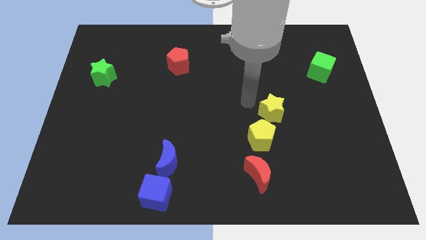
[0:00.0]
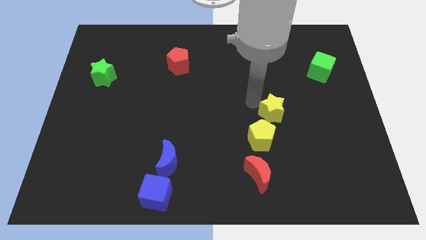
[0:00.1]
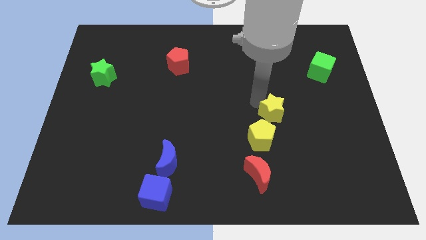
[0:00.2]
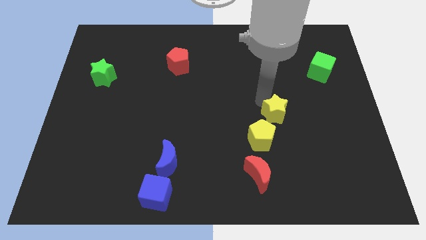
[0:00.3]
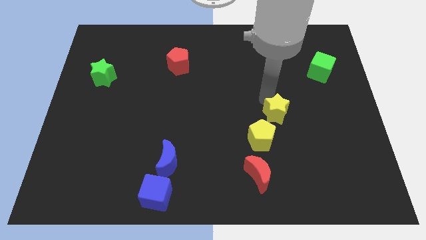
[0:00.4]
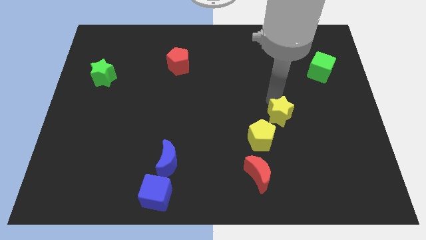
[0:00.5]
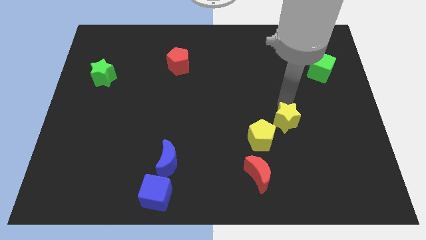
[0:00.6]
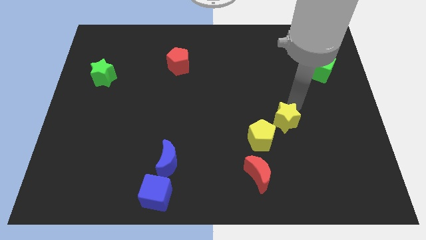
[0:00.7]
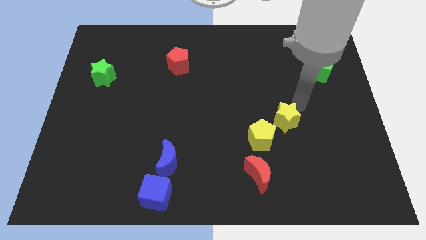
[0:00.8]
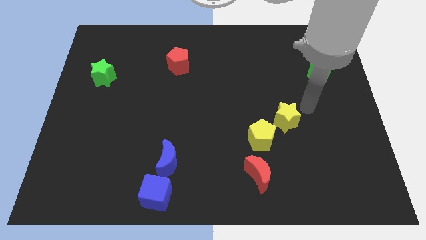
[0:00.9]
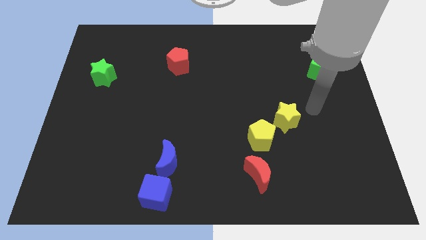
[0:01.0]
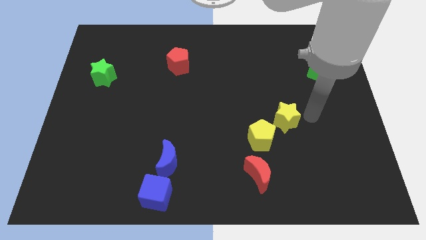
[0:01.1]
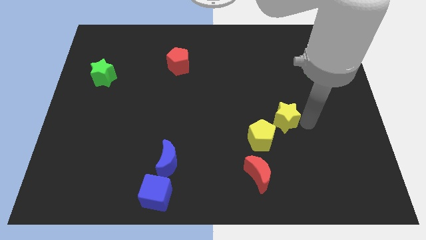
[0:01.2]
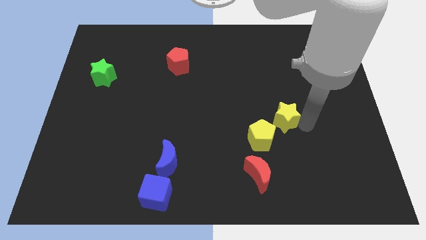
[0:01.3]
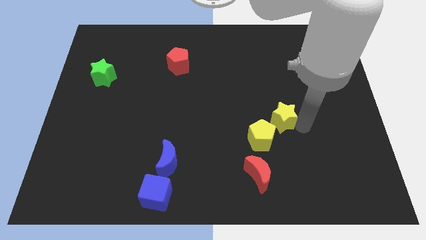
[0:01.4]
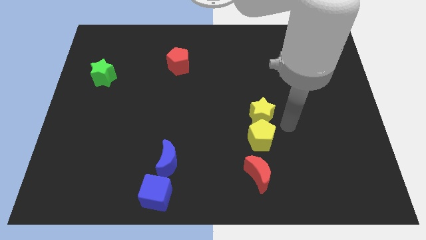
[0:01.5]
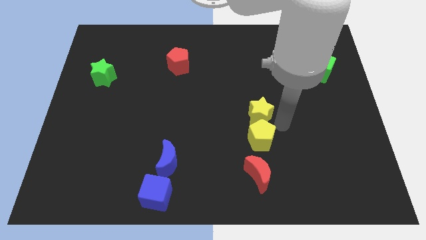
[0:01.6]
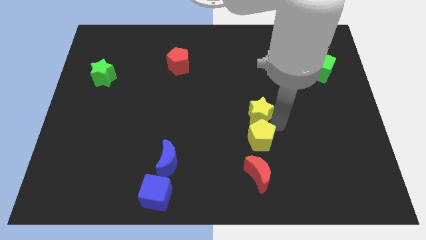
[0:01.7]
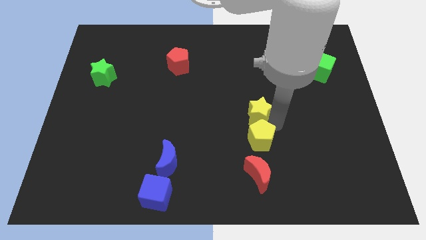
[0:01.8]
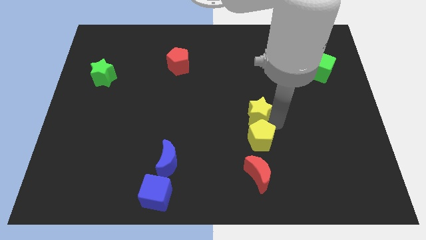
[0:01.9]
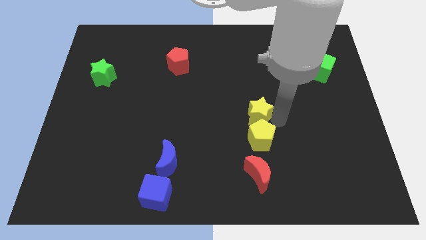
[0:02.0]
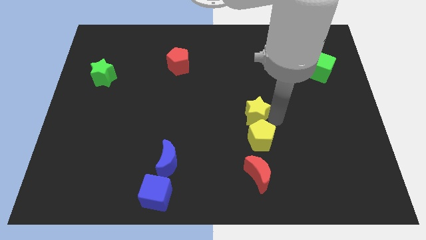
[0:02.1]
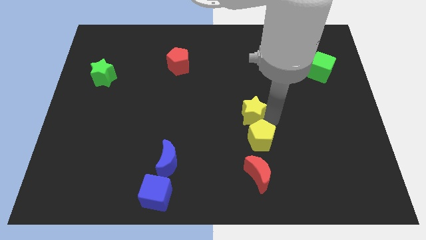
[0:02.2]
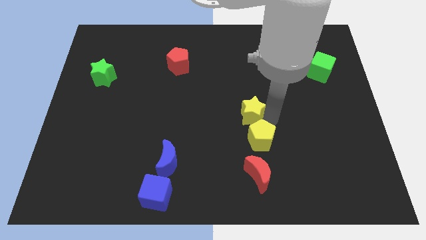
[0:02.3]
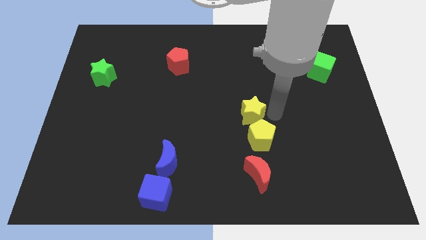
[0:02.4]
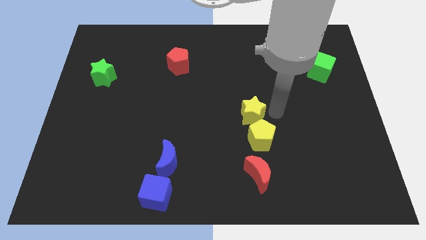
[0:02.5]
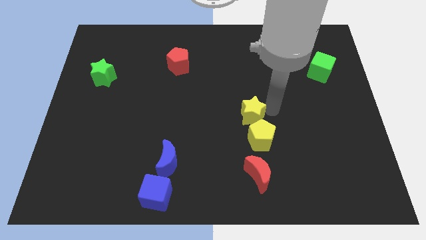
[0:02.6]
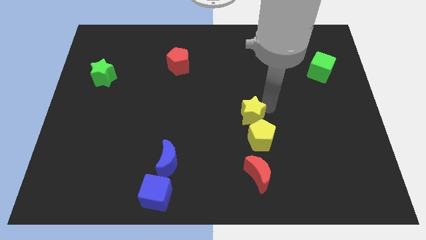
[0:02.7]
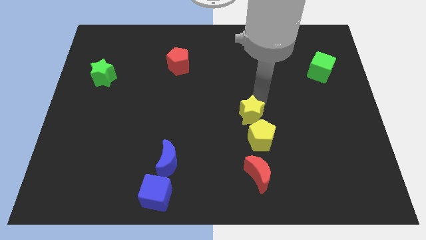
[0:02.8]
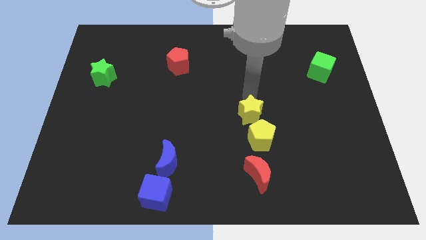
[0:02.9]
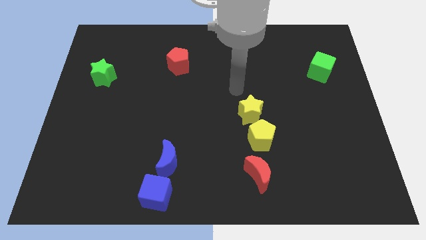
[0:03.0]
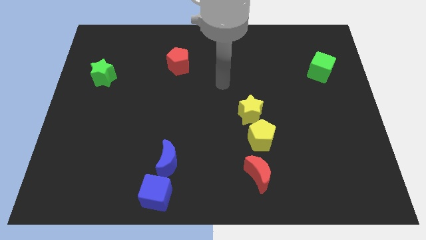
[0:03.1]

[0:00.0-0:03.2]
push the yellow star to the top of yellow pentagon

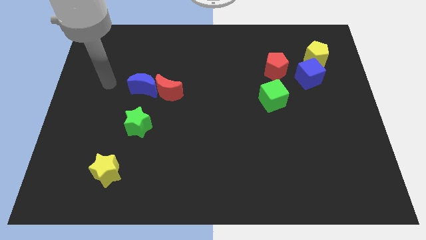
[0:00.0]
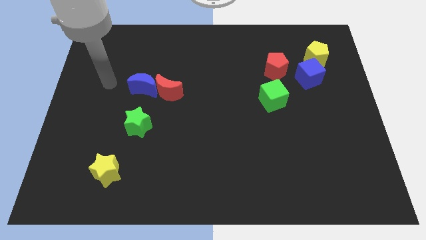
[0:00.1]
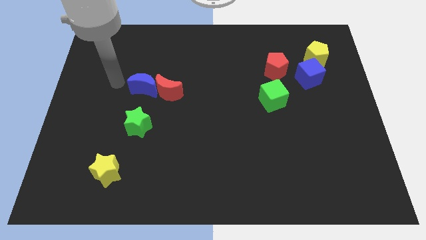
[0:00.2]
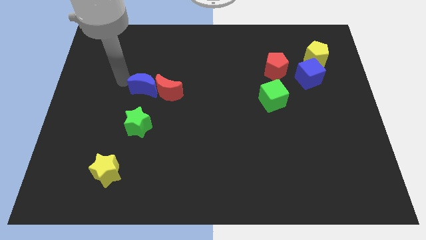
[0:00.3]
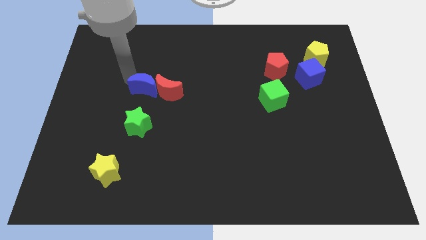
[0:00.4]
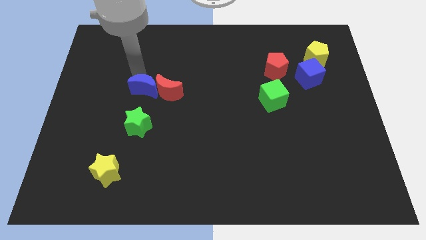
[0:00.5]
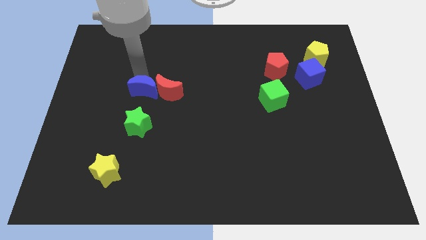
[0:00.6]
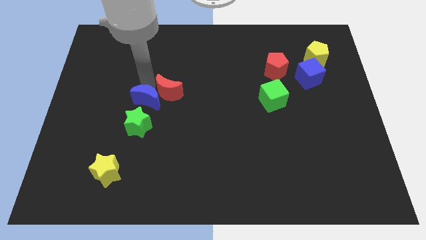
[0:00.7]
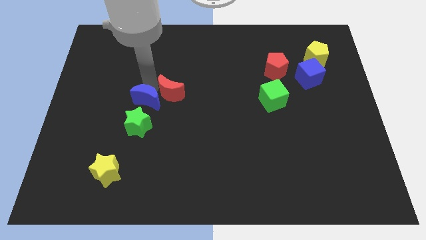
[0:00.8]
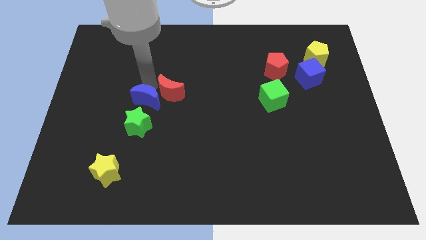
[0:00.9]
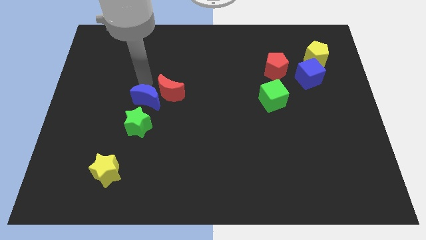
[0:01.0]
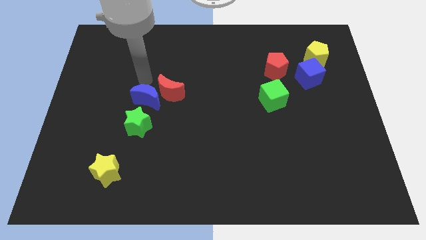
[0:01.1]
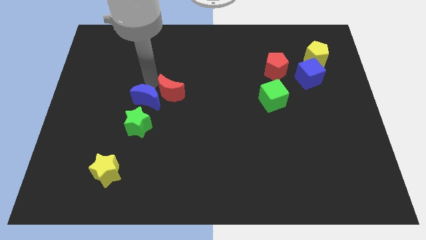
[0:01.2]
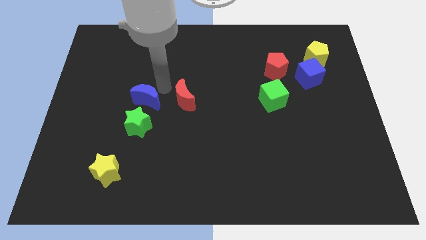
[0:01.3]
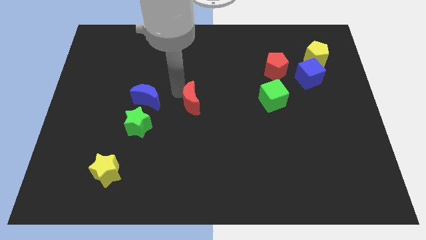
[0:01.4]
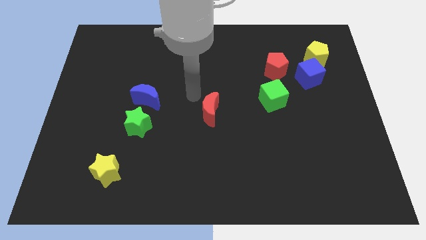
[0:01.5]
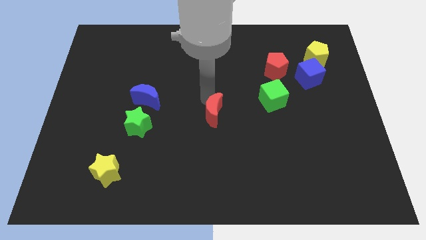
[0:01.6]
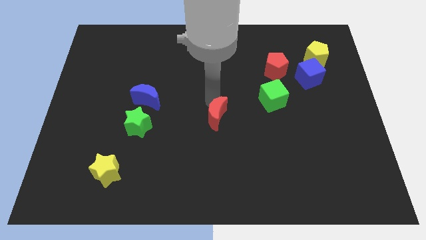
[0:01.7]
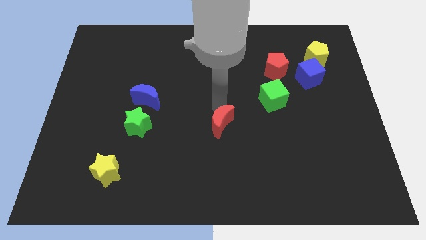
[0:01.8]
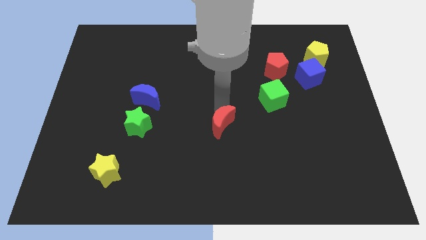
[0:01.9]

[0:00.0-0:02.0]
separate the red moon and blue moon

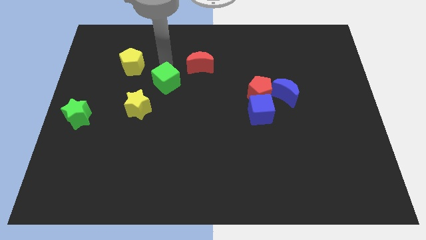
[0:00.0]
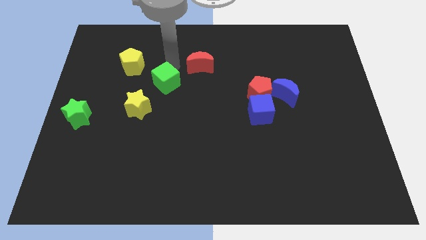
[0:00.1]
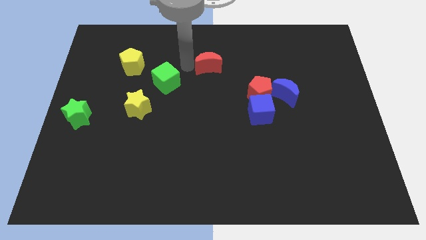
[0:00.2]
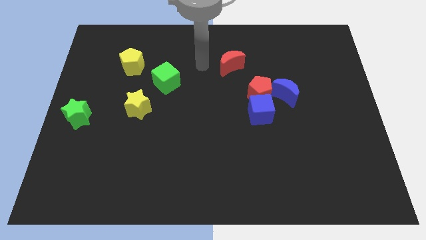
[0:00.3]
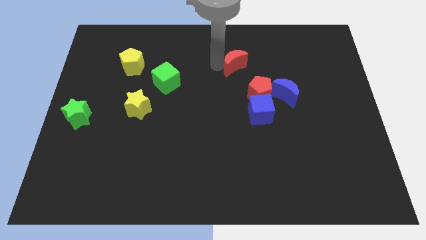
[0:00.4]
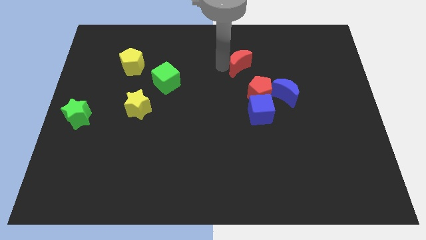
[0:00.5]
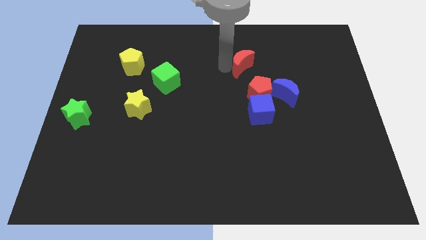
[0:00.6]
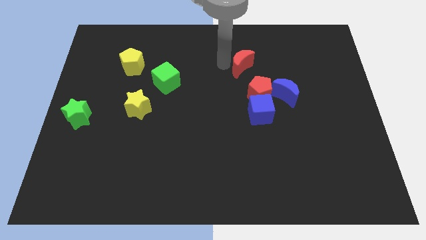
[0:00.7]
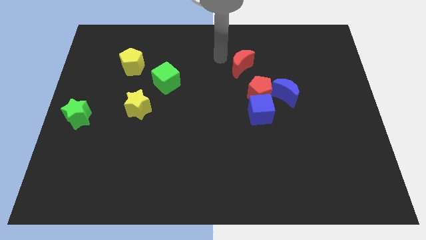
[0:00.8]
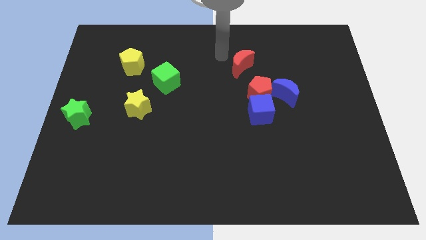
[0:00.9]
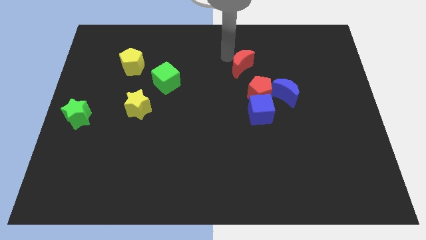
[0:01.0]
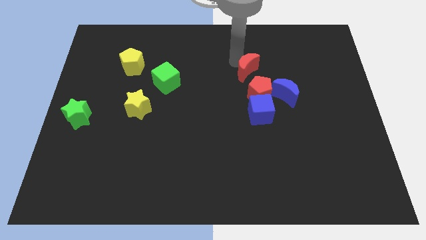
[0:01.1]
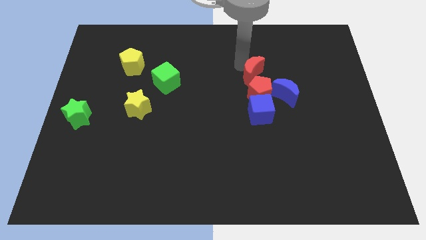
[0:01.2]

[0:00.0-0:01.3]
push the red crescent towards the top side of the red pentagon

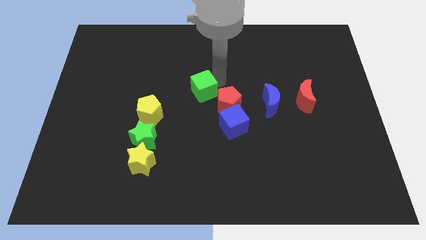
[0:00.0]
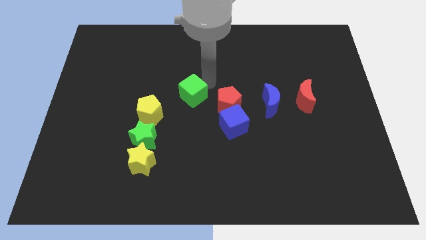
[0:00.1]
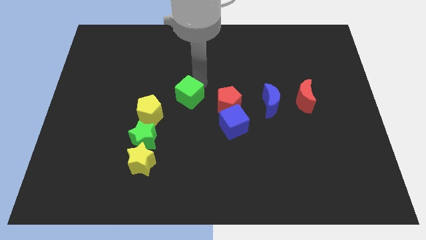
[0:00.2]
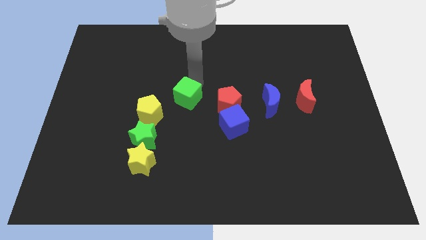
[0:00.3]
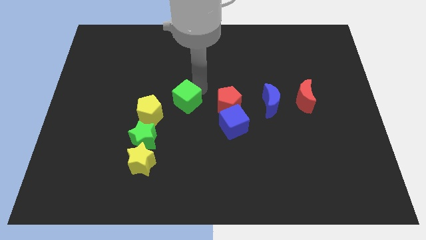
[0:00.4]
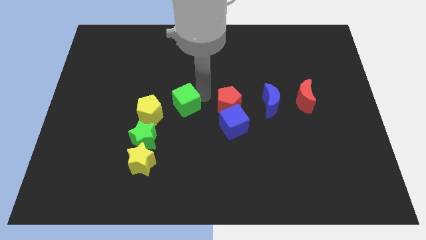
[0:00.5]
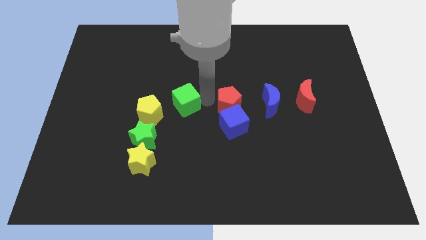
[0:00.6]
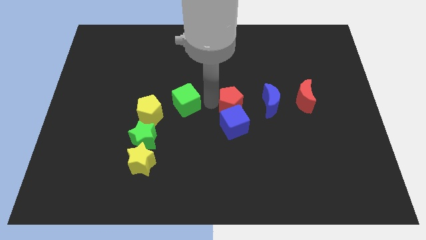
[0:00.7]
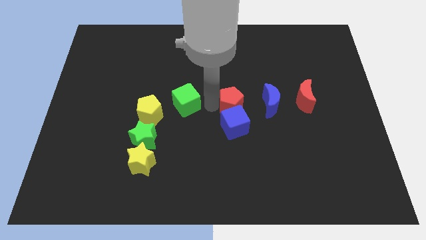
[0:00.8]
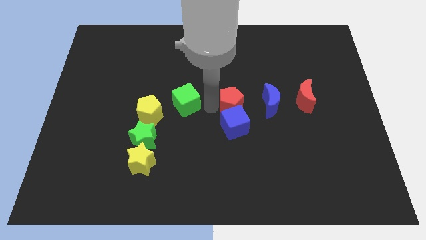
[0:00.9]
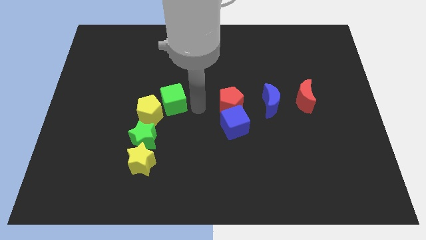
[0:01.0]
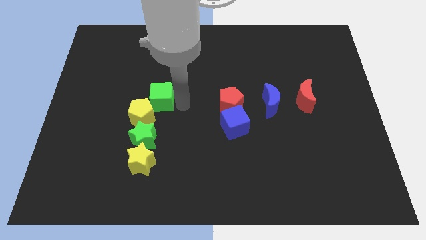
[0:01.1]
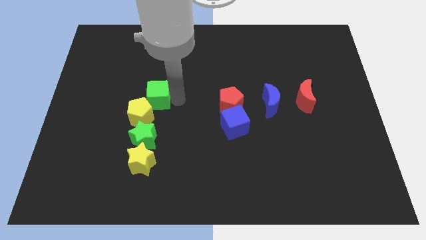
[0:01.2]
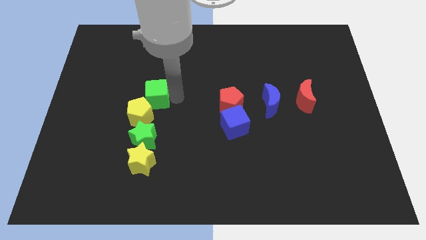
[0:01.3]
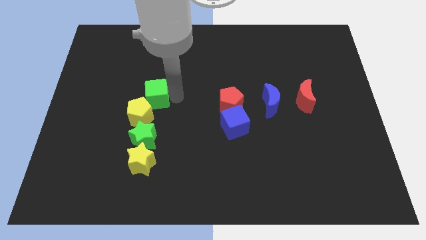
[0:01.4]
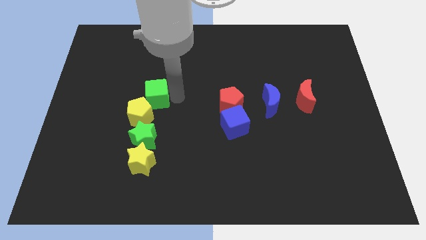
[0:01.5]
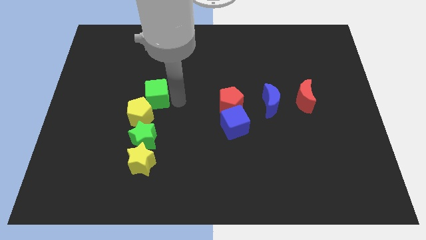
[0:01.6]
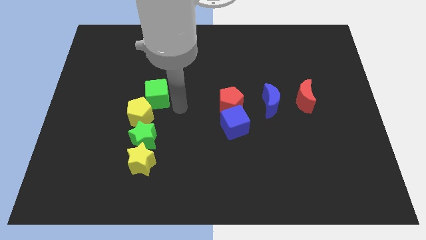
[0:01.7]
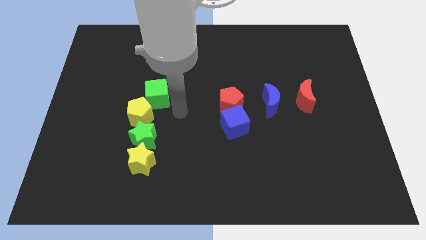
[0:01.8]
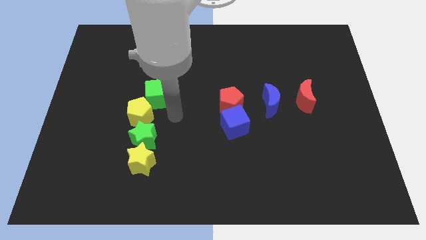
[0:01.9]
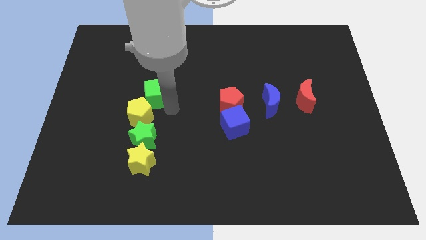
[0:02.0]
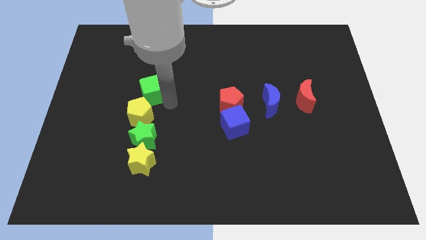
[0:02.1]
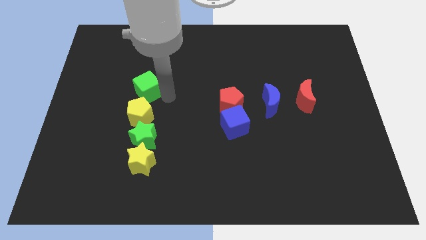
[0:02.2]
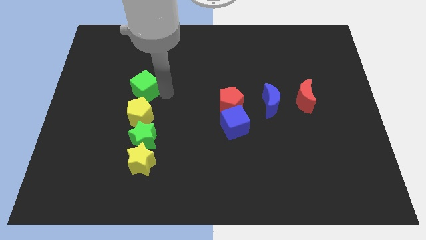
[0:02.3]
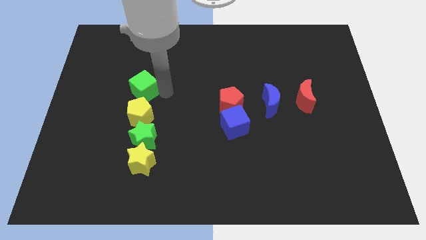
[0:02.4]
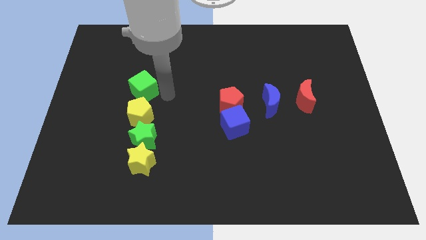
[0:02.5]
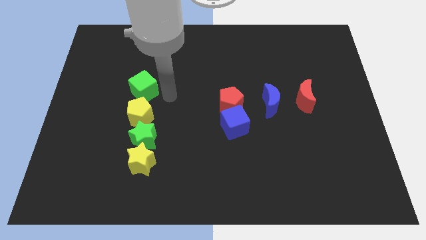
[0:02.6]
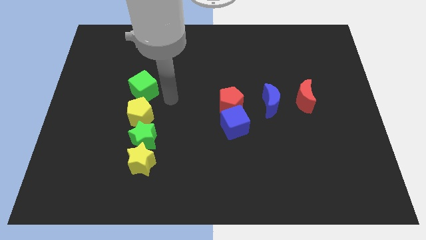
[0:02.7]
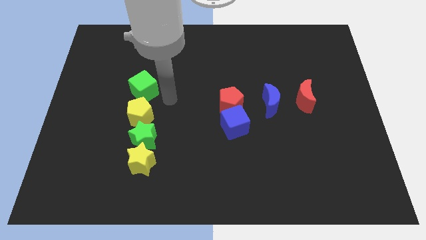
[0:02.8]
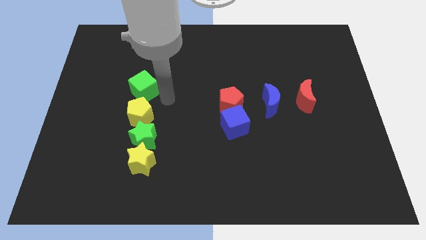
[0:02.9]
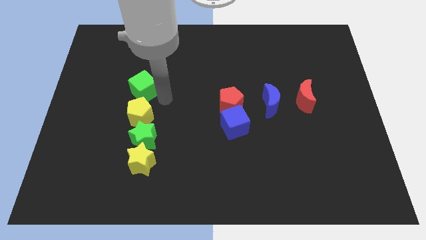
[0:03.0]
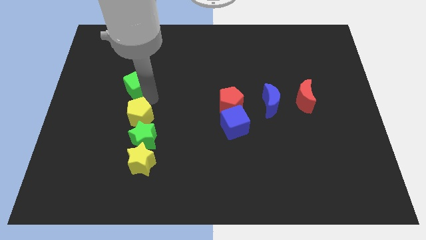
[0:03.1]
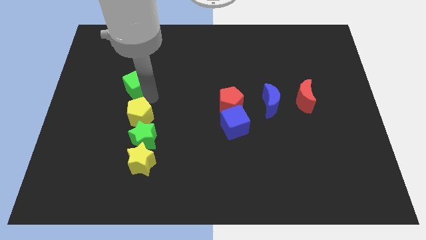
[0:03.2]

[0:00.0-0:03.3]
place the green cube above yellow pentagon
